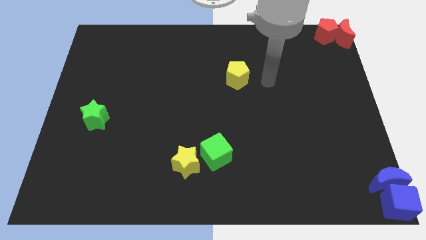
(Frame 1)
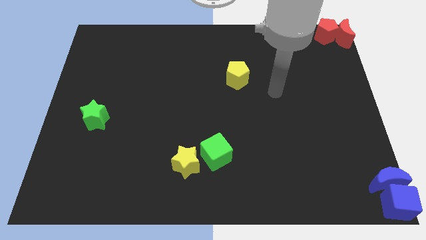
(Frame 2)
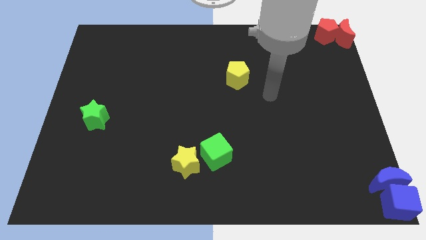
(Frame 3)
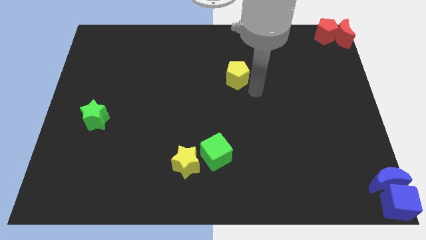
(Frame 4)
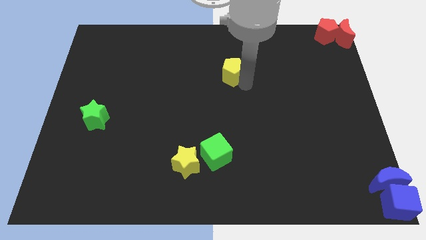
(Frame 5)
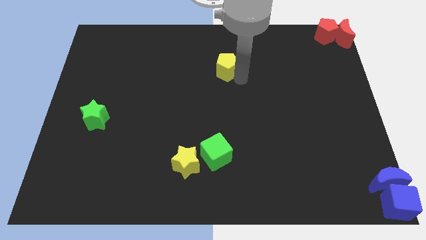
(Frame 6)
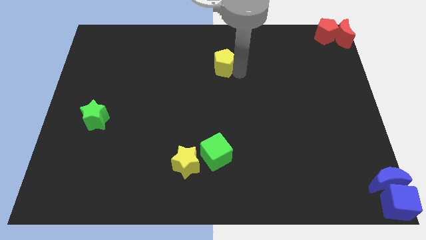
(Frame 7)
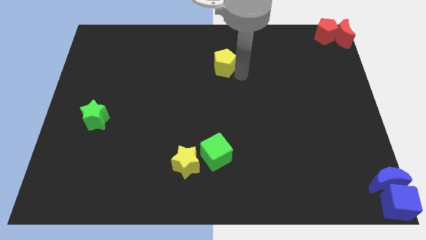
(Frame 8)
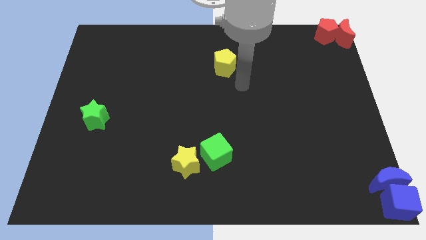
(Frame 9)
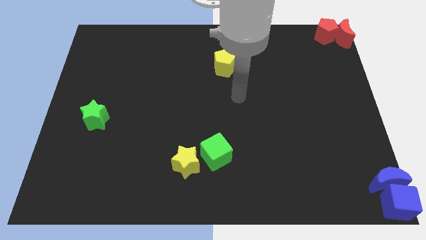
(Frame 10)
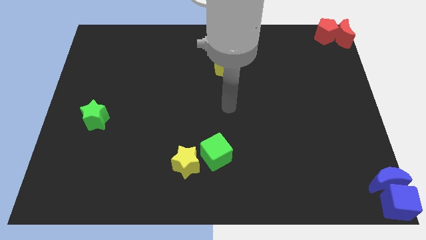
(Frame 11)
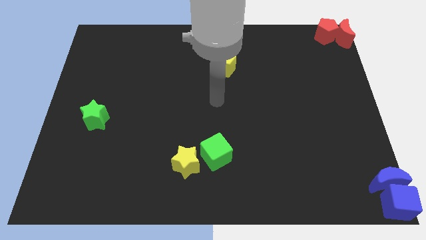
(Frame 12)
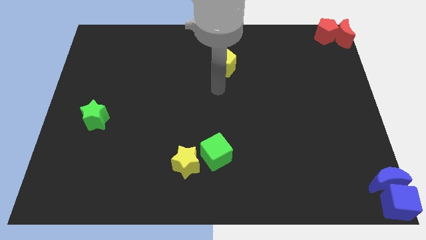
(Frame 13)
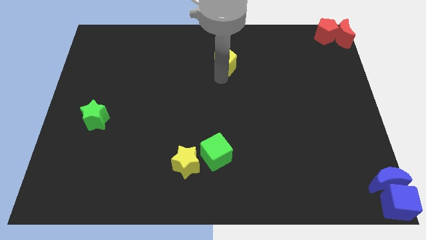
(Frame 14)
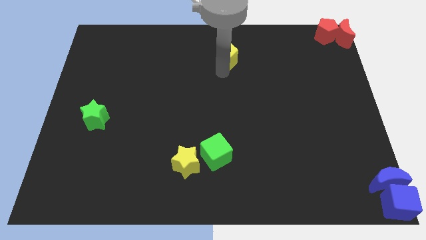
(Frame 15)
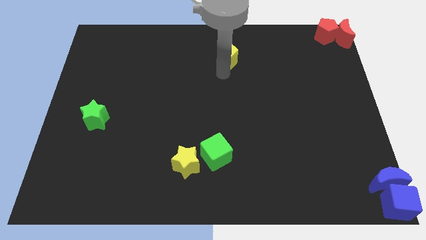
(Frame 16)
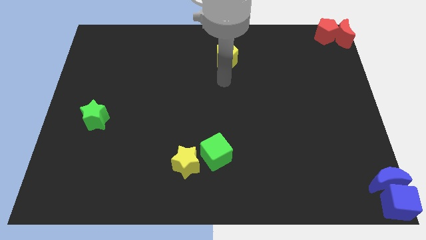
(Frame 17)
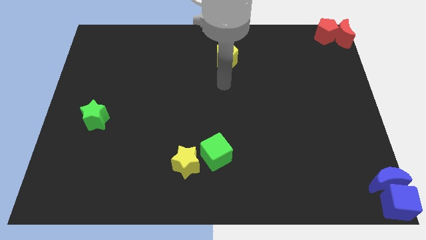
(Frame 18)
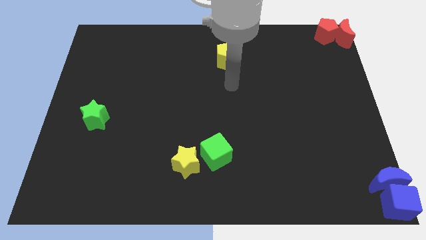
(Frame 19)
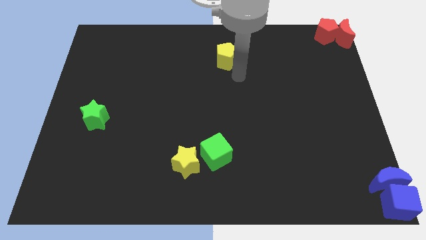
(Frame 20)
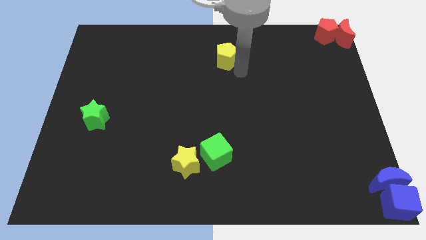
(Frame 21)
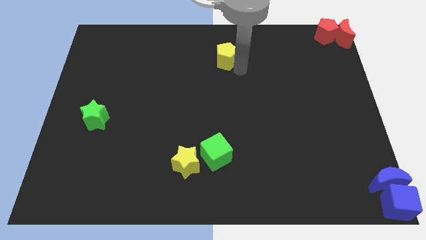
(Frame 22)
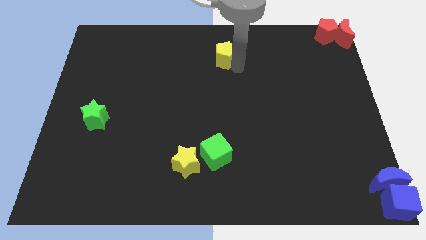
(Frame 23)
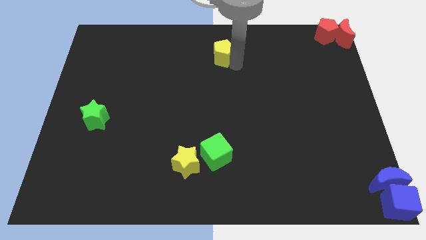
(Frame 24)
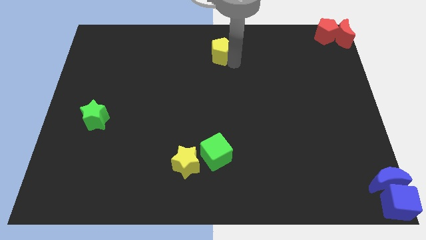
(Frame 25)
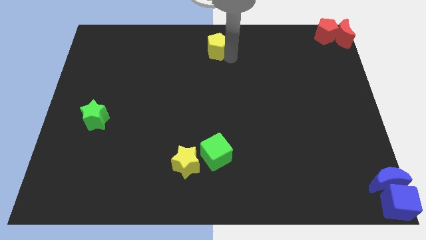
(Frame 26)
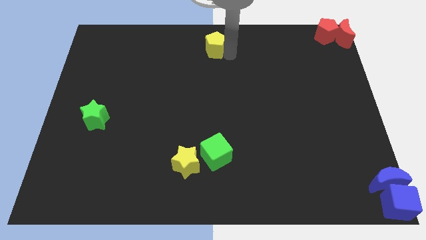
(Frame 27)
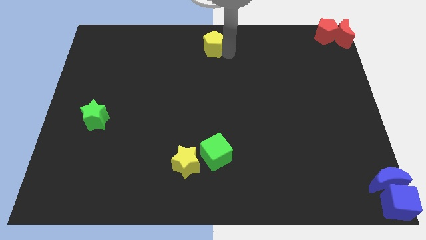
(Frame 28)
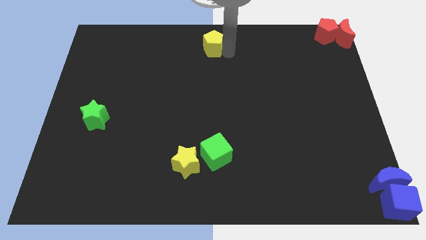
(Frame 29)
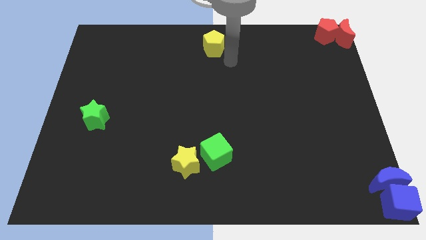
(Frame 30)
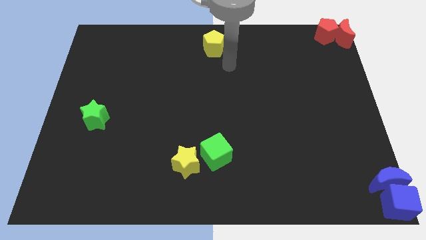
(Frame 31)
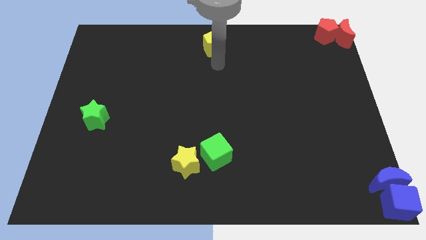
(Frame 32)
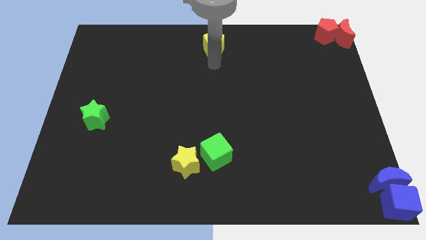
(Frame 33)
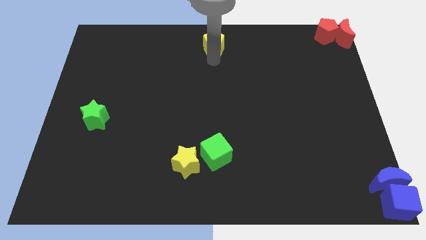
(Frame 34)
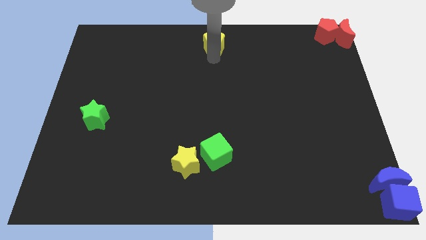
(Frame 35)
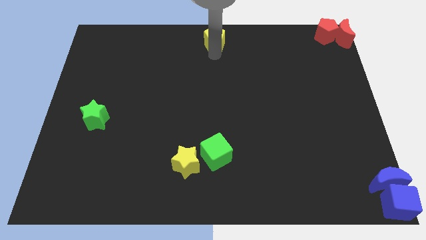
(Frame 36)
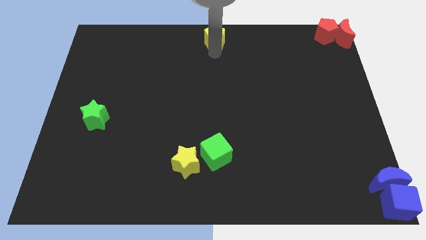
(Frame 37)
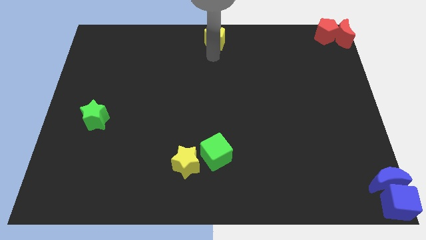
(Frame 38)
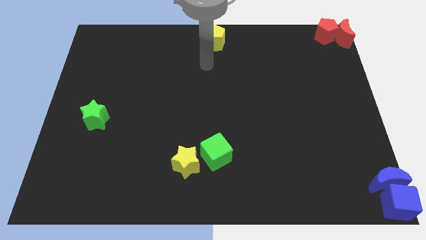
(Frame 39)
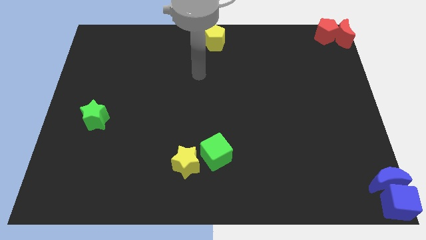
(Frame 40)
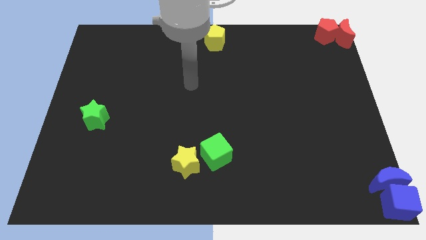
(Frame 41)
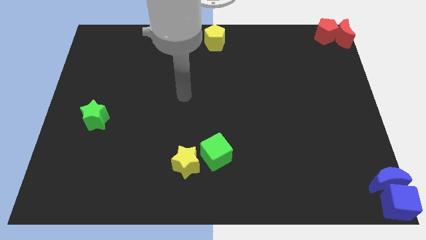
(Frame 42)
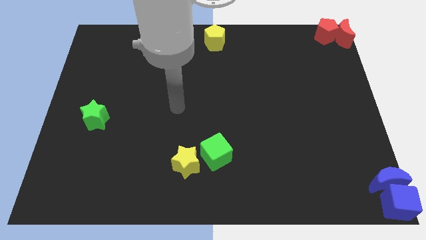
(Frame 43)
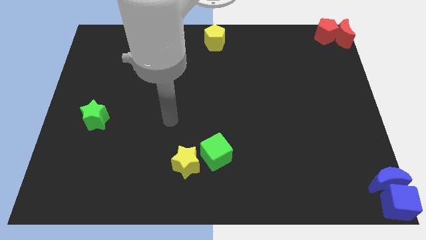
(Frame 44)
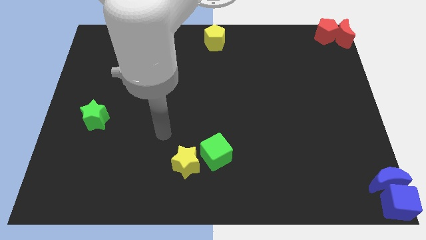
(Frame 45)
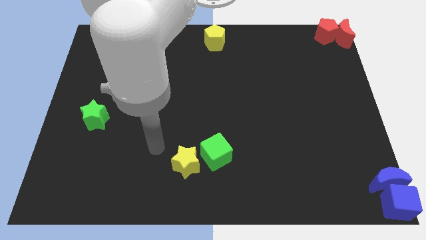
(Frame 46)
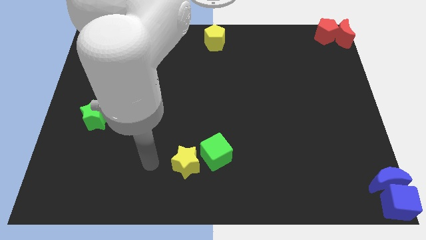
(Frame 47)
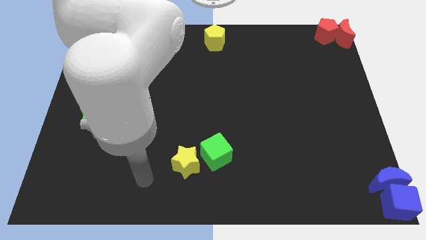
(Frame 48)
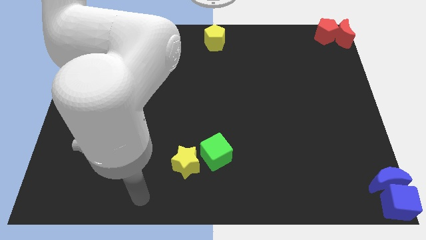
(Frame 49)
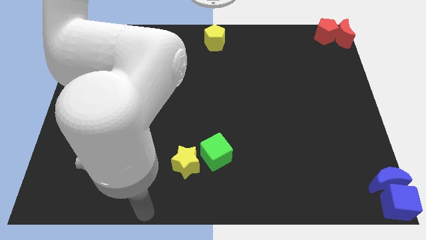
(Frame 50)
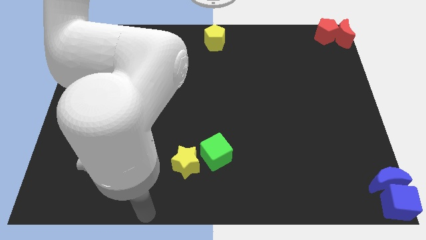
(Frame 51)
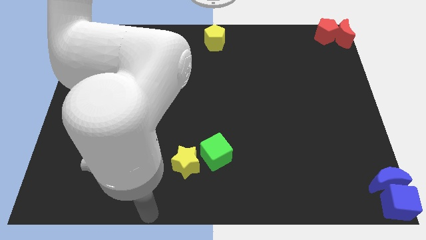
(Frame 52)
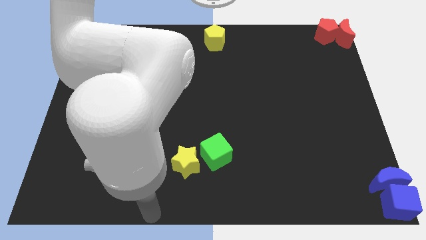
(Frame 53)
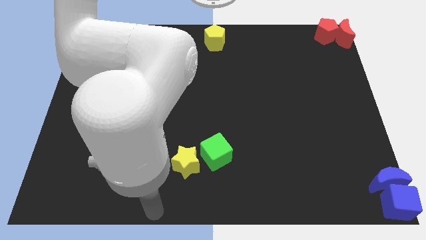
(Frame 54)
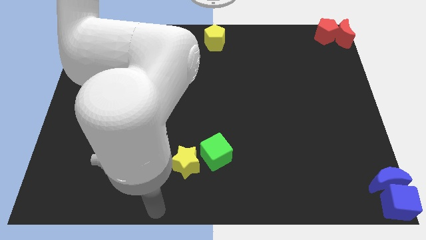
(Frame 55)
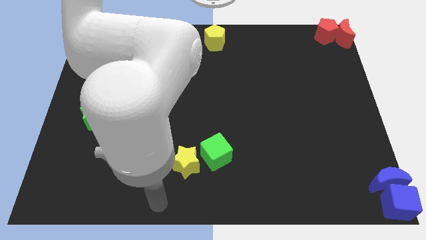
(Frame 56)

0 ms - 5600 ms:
place the yellow pentagon at the top center of the board

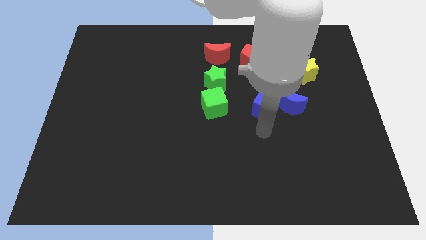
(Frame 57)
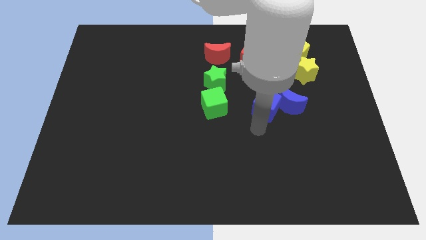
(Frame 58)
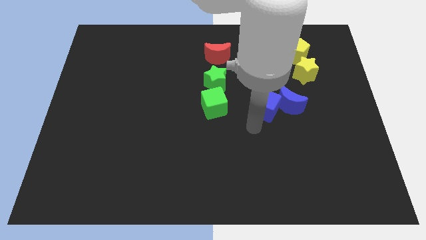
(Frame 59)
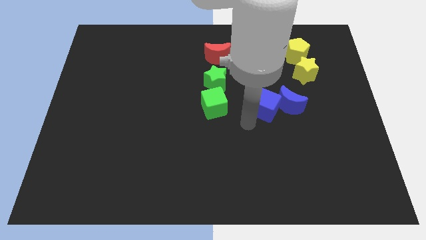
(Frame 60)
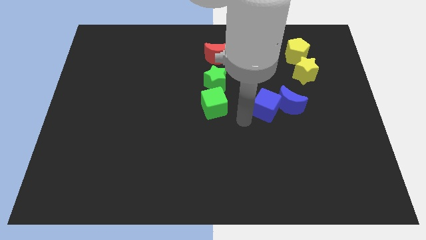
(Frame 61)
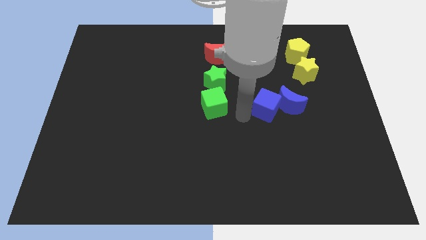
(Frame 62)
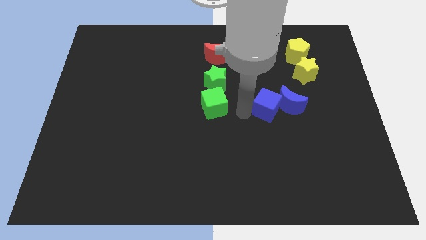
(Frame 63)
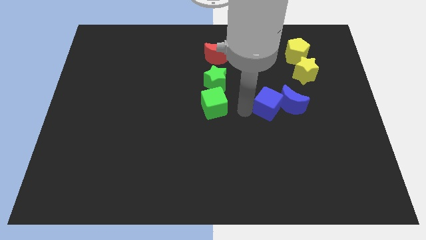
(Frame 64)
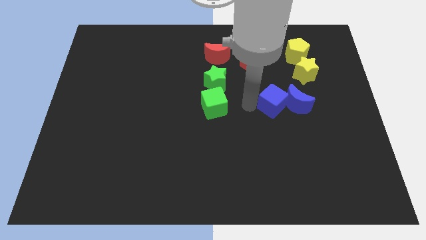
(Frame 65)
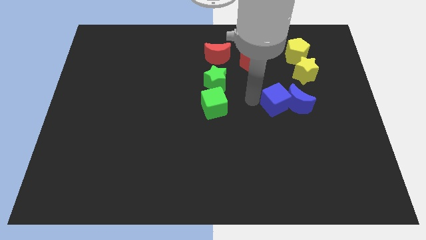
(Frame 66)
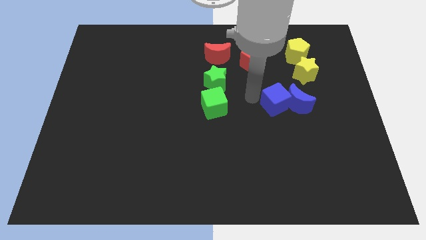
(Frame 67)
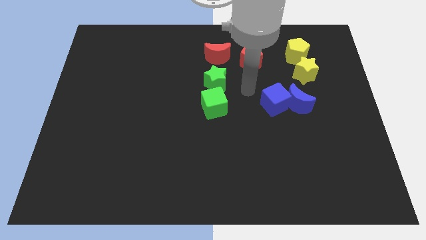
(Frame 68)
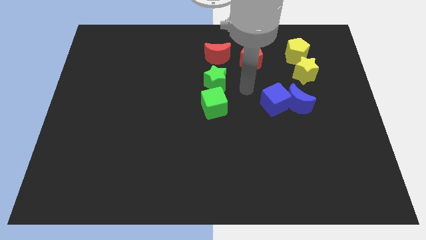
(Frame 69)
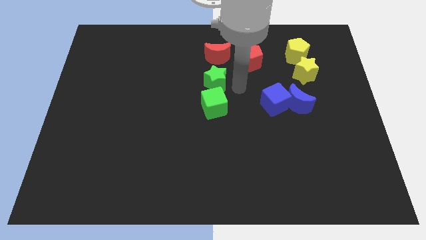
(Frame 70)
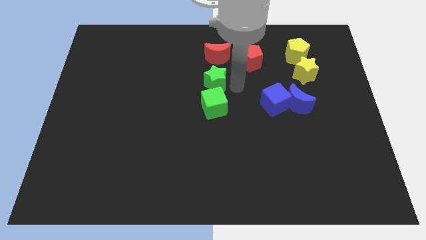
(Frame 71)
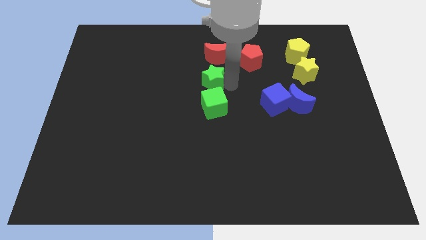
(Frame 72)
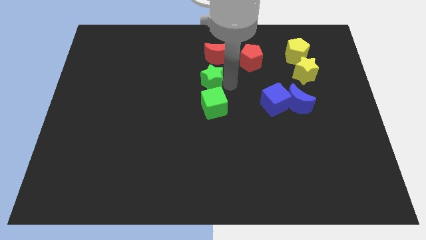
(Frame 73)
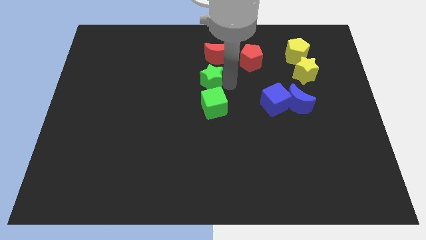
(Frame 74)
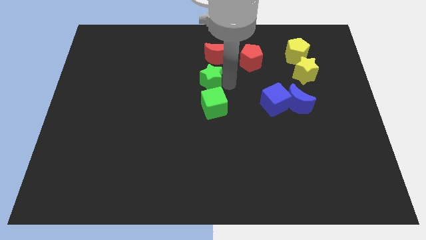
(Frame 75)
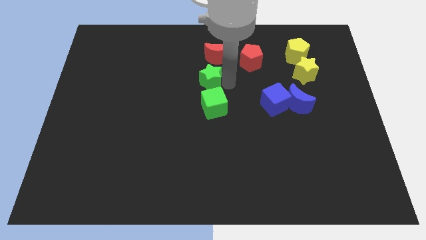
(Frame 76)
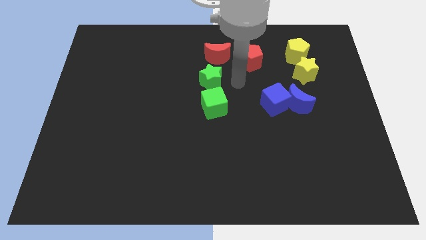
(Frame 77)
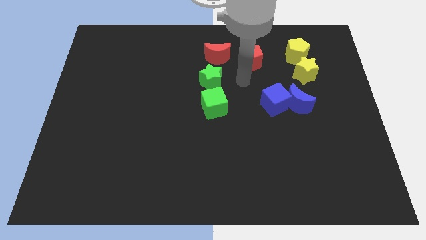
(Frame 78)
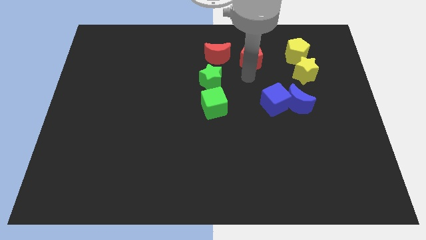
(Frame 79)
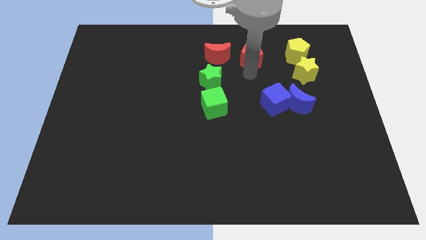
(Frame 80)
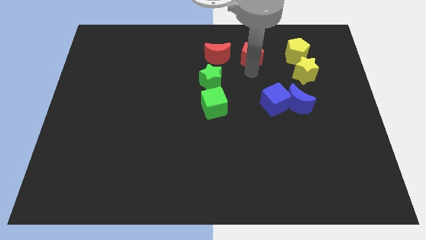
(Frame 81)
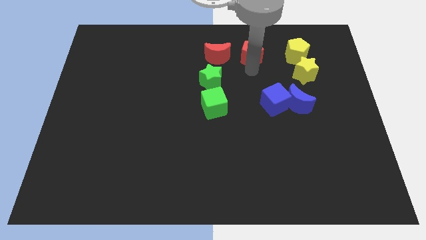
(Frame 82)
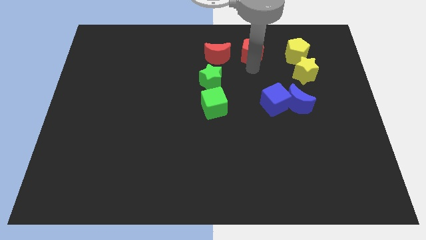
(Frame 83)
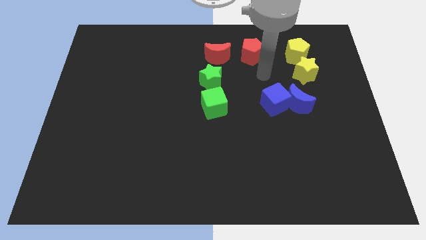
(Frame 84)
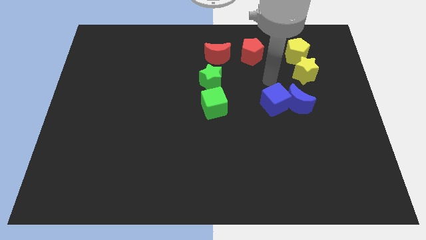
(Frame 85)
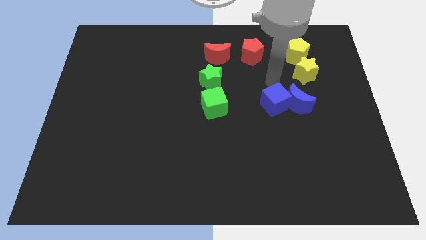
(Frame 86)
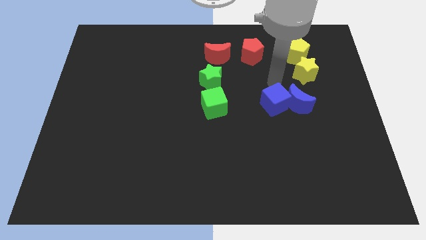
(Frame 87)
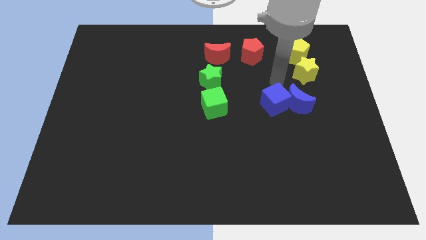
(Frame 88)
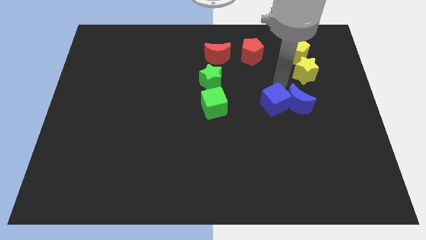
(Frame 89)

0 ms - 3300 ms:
move the red pentagon parallel to the left of the yellow pentagon
